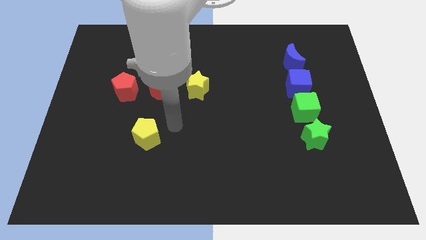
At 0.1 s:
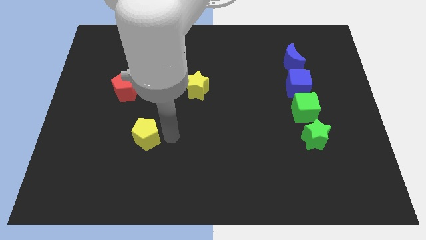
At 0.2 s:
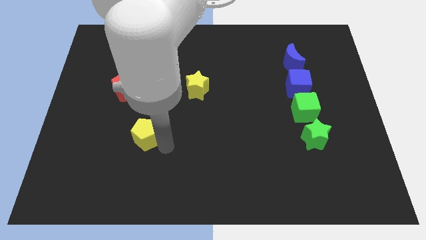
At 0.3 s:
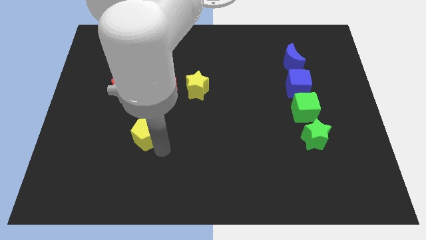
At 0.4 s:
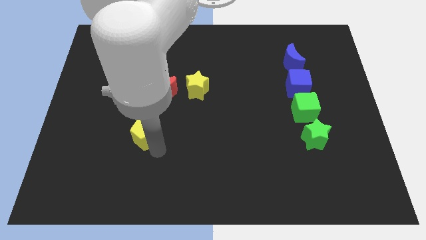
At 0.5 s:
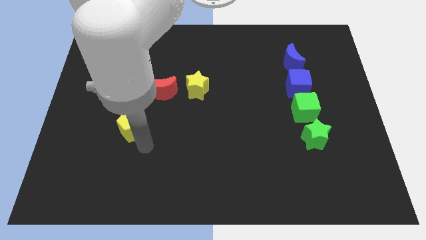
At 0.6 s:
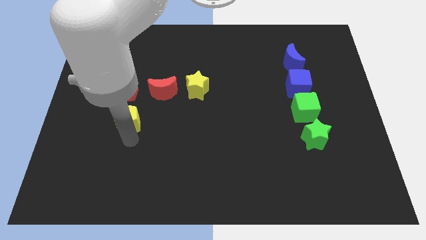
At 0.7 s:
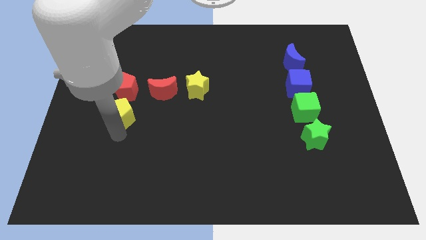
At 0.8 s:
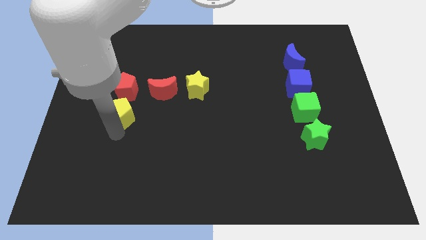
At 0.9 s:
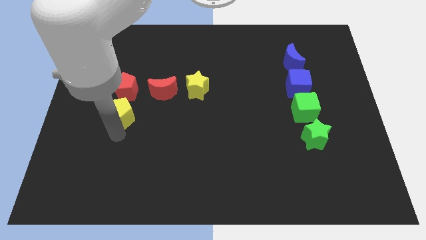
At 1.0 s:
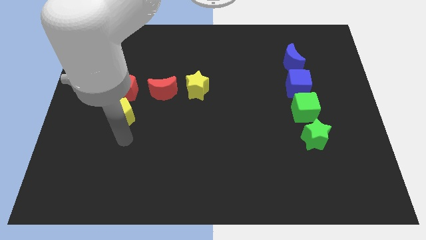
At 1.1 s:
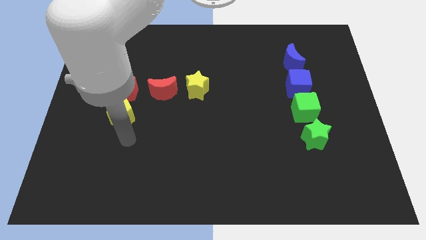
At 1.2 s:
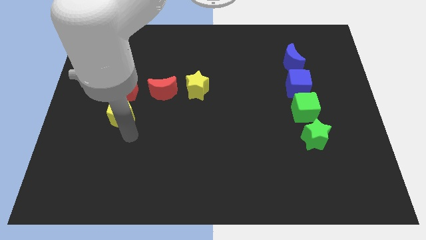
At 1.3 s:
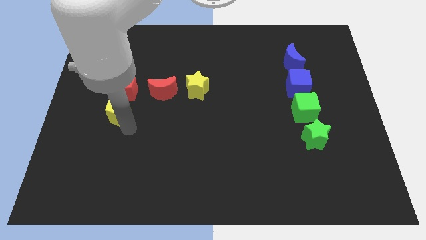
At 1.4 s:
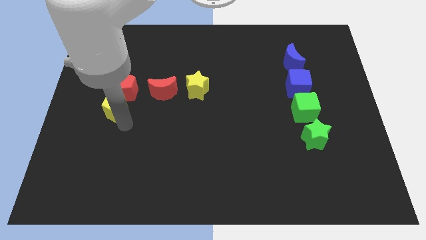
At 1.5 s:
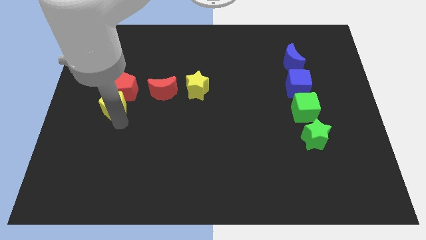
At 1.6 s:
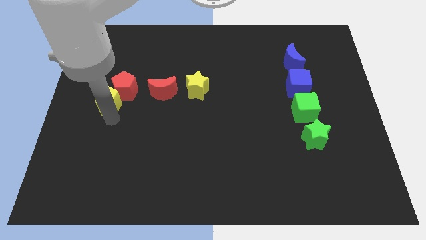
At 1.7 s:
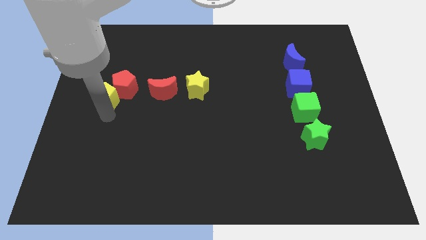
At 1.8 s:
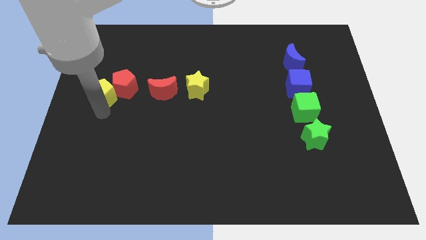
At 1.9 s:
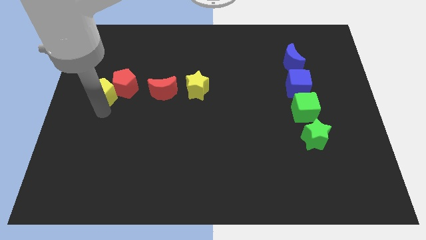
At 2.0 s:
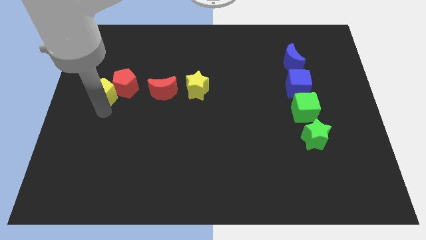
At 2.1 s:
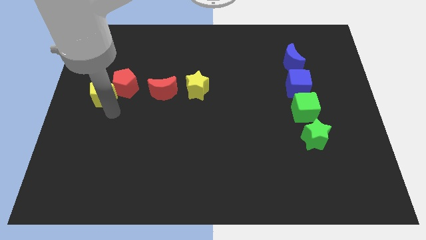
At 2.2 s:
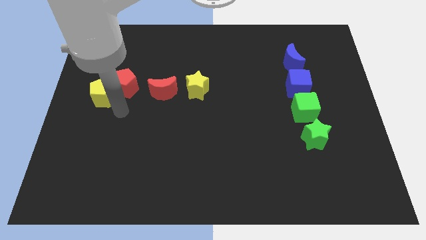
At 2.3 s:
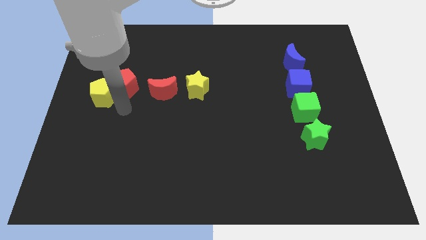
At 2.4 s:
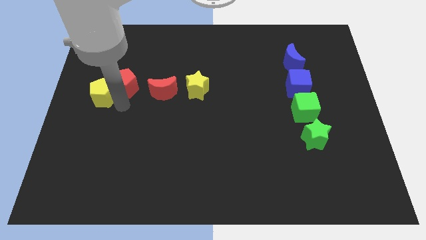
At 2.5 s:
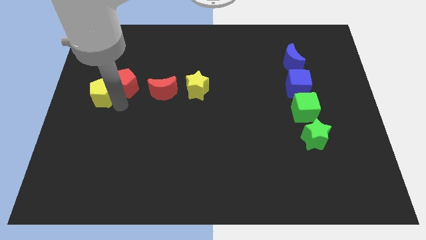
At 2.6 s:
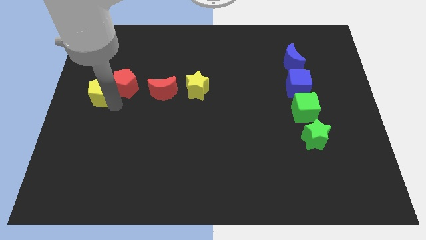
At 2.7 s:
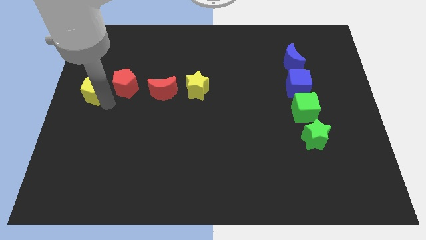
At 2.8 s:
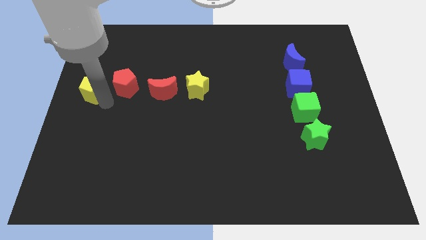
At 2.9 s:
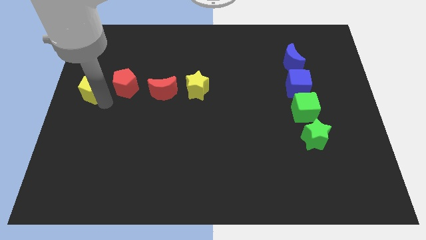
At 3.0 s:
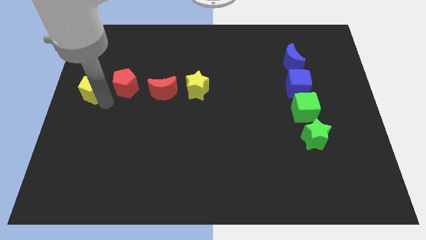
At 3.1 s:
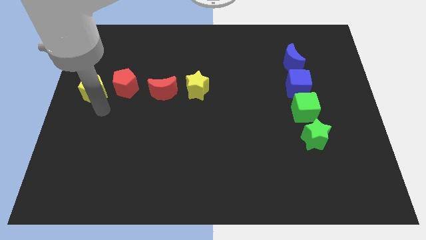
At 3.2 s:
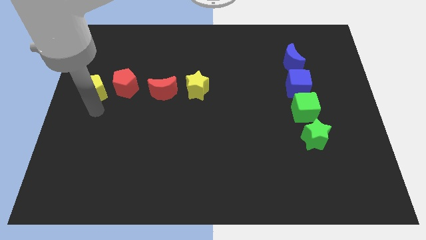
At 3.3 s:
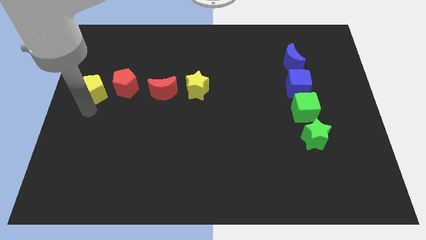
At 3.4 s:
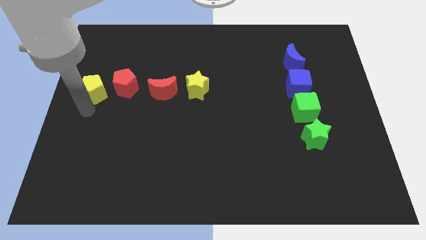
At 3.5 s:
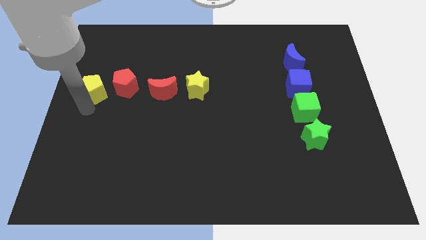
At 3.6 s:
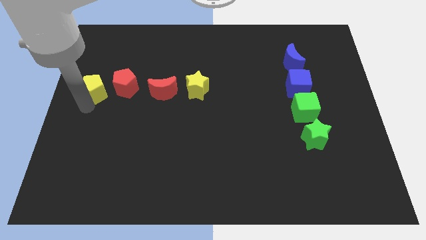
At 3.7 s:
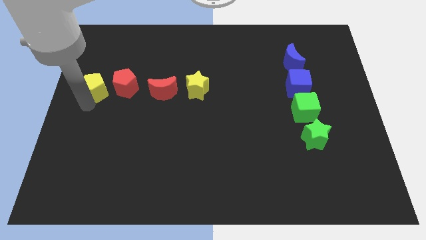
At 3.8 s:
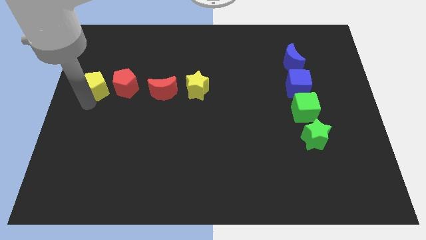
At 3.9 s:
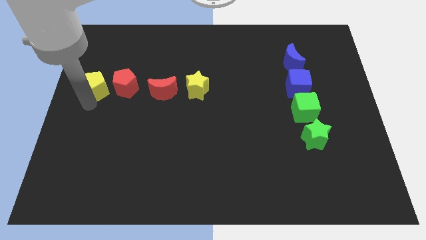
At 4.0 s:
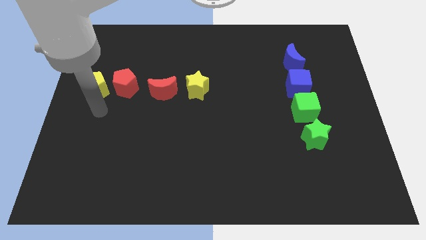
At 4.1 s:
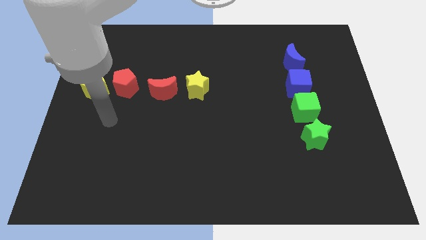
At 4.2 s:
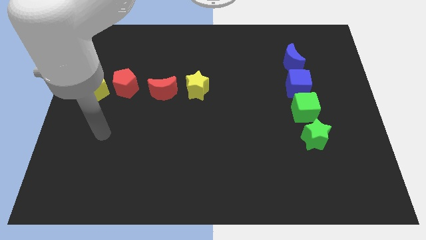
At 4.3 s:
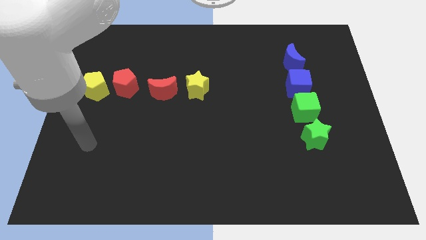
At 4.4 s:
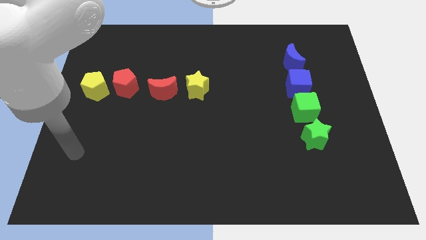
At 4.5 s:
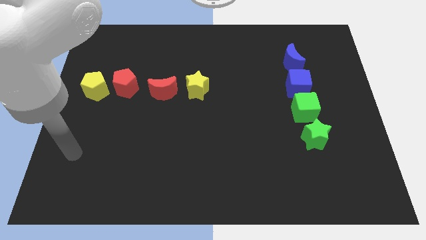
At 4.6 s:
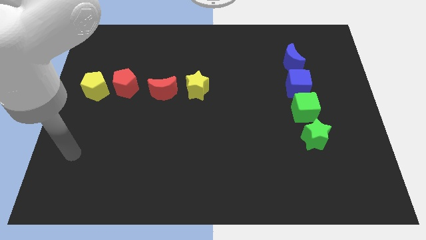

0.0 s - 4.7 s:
move the yellow pentagon to the left side of the red pentagon

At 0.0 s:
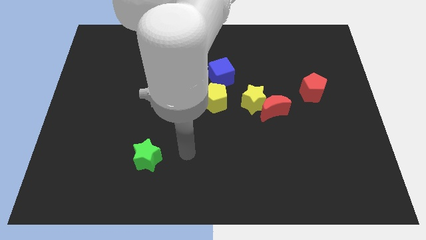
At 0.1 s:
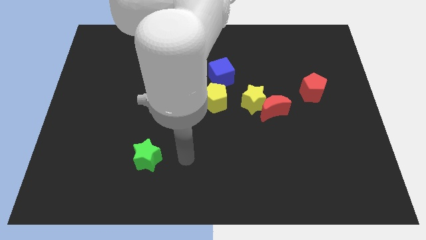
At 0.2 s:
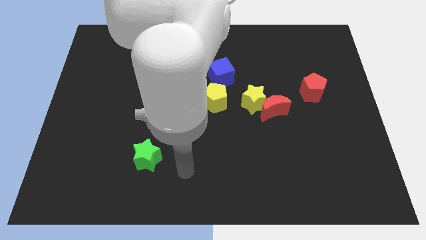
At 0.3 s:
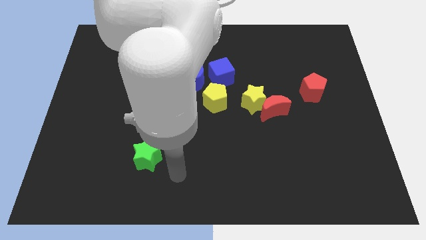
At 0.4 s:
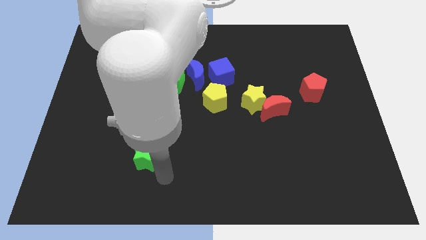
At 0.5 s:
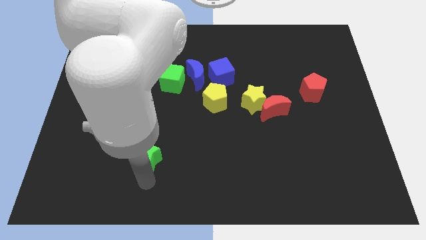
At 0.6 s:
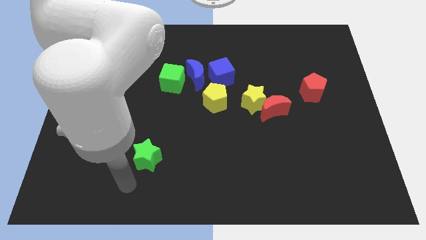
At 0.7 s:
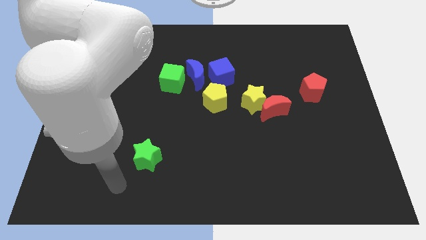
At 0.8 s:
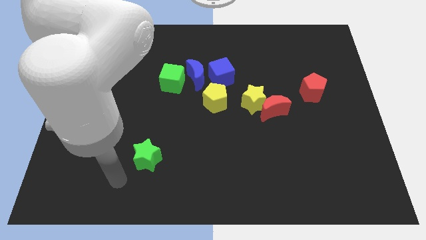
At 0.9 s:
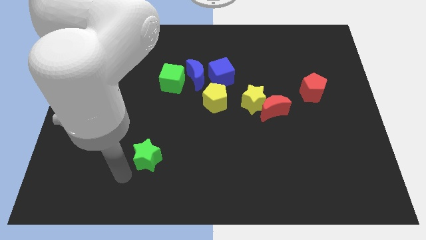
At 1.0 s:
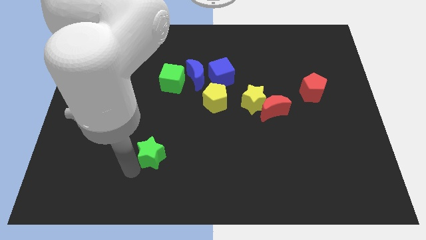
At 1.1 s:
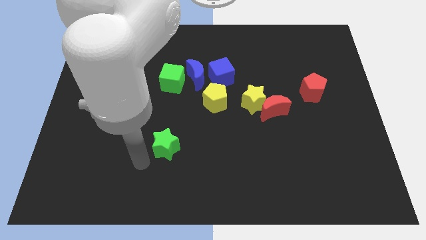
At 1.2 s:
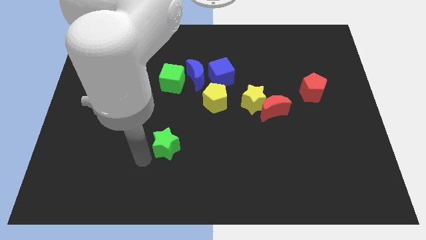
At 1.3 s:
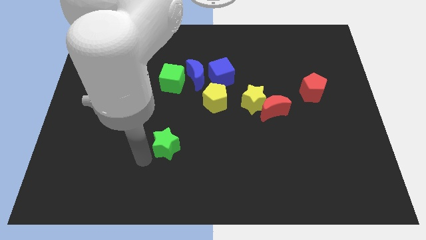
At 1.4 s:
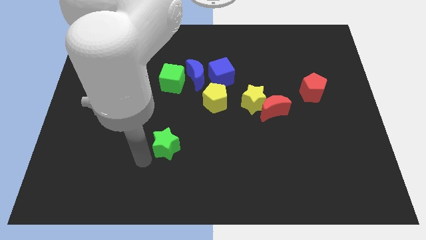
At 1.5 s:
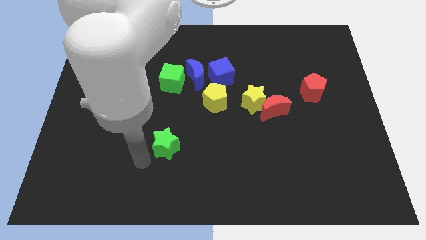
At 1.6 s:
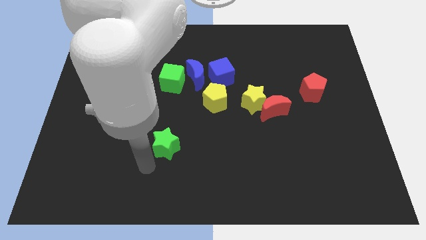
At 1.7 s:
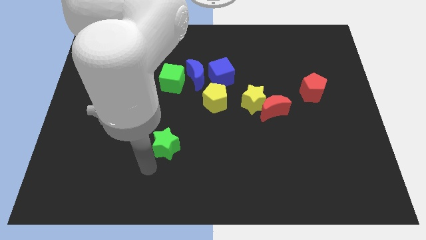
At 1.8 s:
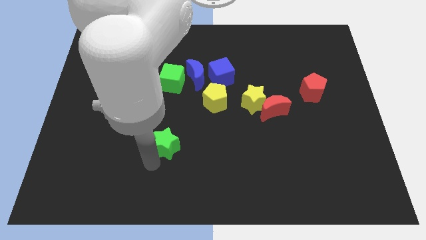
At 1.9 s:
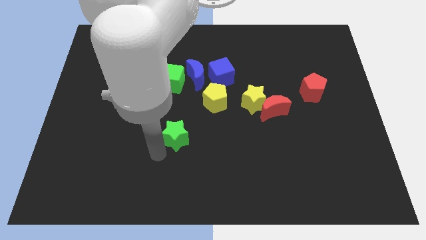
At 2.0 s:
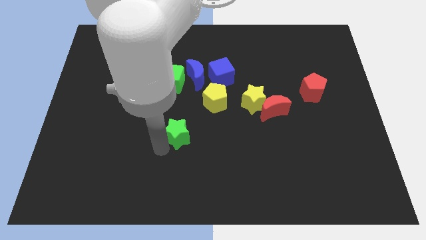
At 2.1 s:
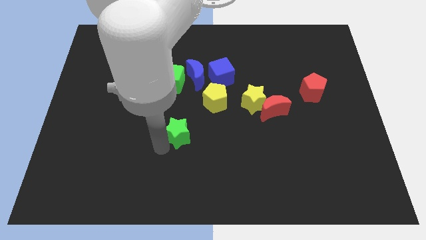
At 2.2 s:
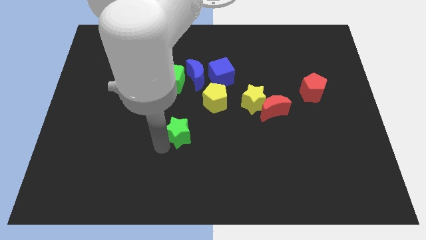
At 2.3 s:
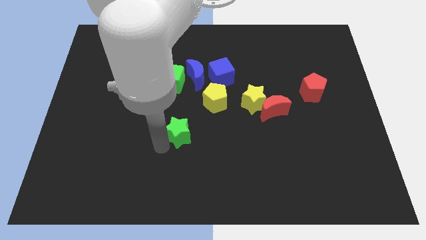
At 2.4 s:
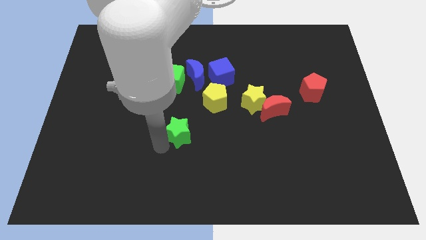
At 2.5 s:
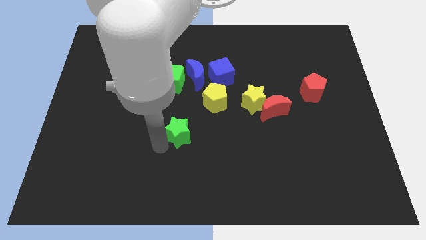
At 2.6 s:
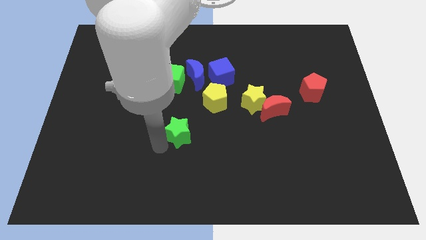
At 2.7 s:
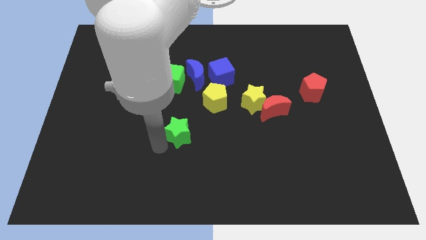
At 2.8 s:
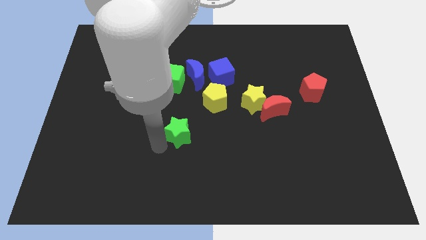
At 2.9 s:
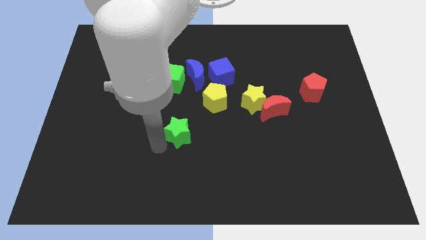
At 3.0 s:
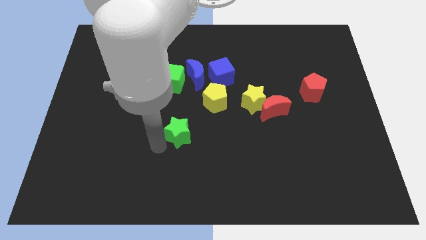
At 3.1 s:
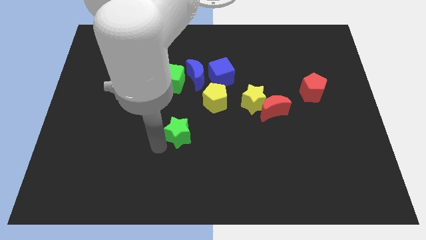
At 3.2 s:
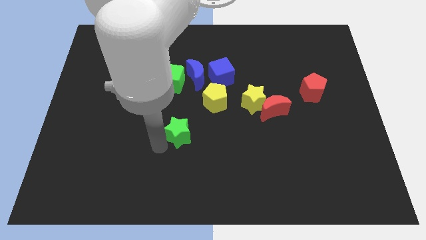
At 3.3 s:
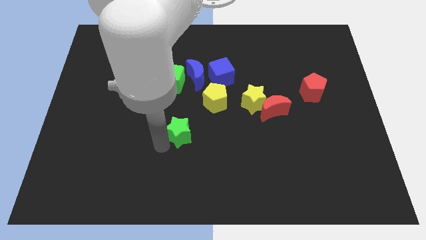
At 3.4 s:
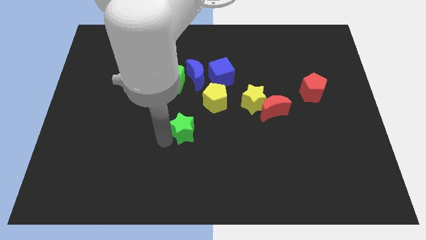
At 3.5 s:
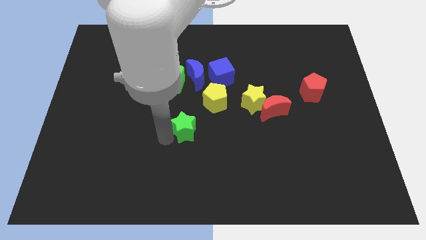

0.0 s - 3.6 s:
push the green star towards the yellow pentagon

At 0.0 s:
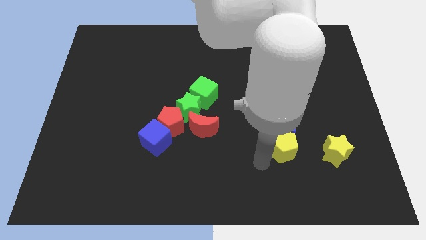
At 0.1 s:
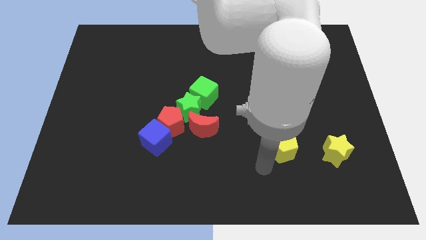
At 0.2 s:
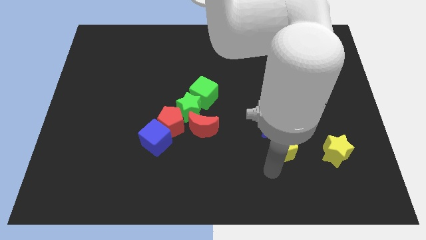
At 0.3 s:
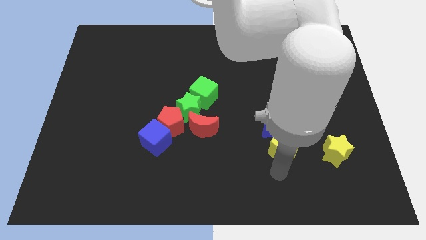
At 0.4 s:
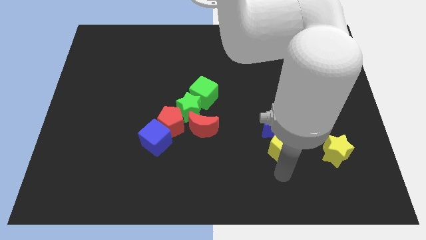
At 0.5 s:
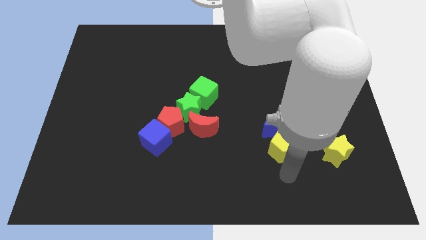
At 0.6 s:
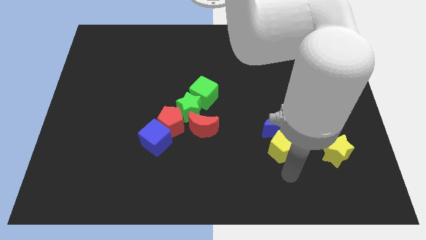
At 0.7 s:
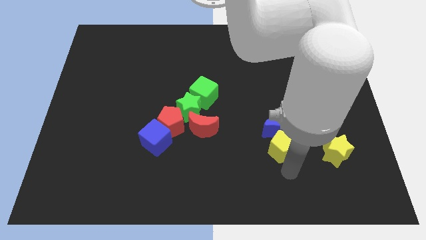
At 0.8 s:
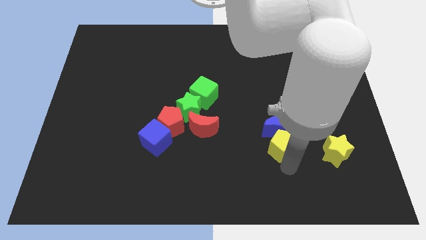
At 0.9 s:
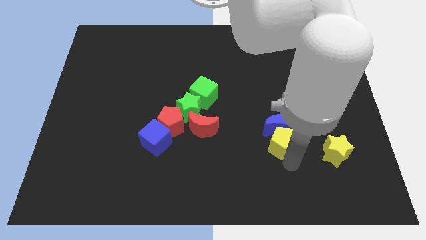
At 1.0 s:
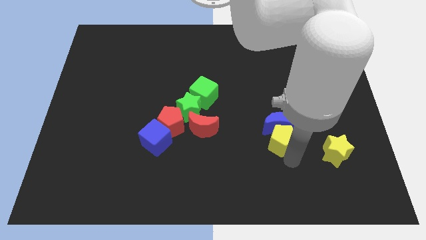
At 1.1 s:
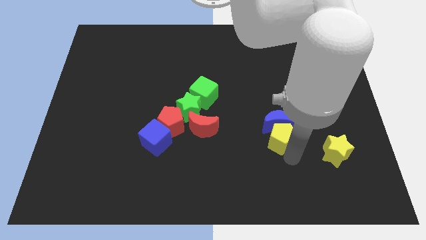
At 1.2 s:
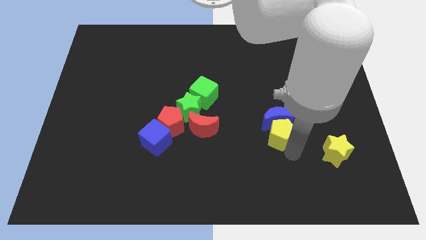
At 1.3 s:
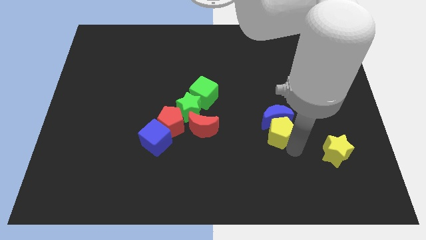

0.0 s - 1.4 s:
push the yellow pentagon into the blue crescent
